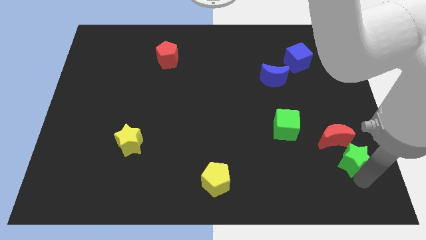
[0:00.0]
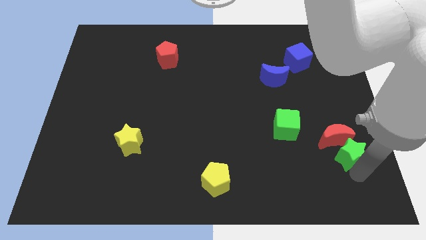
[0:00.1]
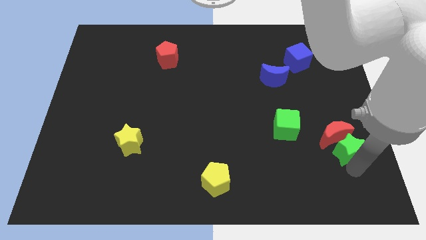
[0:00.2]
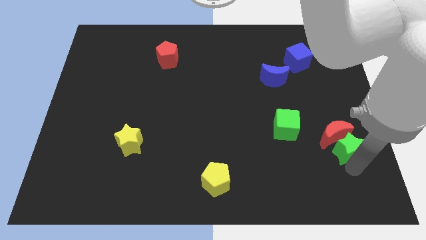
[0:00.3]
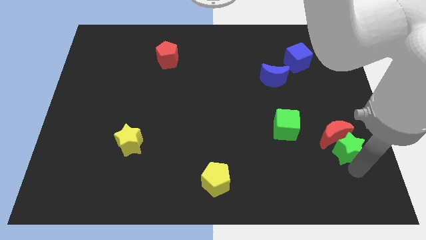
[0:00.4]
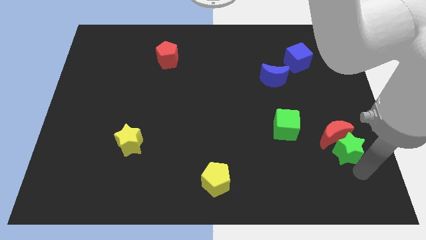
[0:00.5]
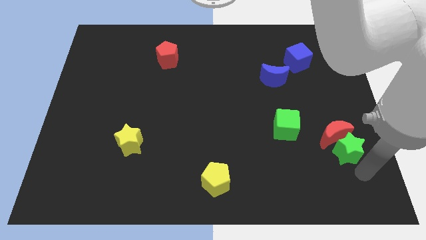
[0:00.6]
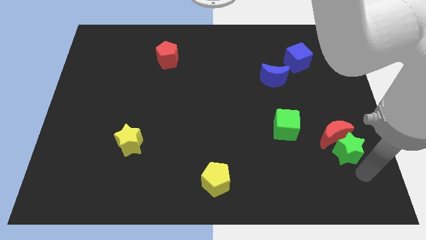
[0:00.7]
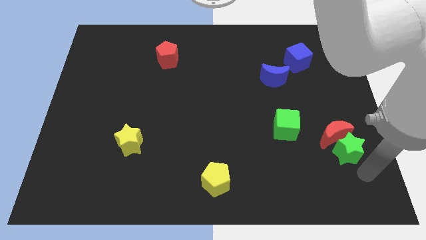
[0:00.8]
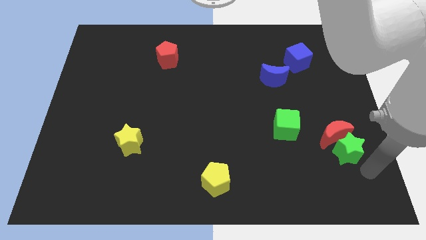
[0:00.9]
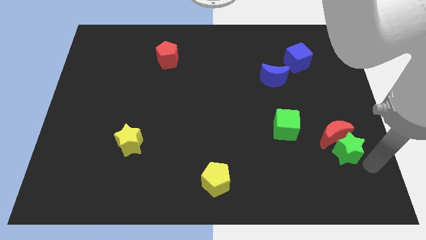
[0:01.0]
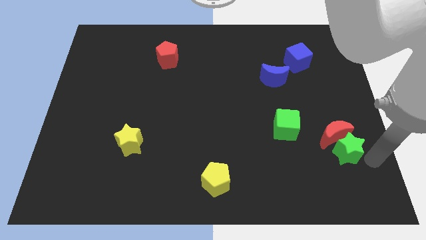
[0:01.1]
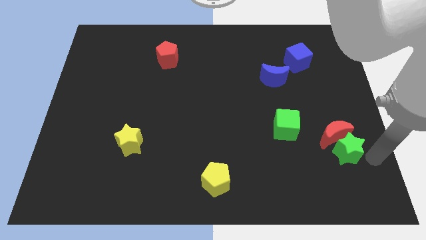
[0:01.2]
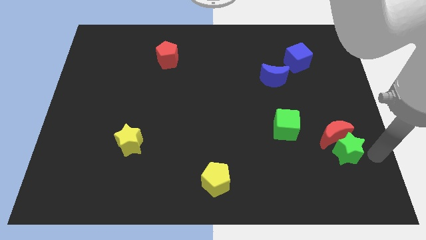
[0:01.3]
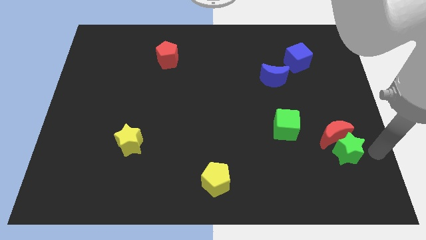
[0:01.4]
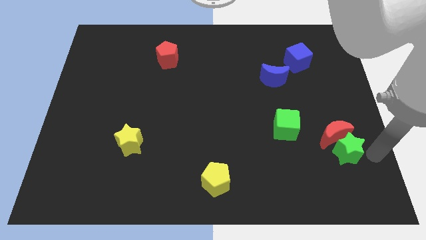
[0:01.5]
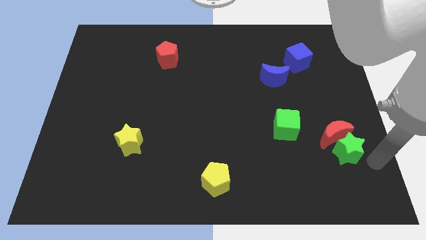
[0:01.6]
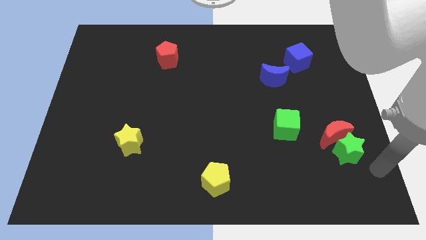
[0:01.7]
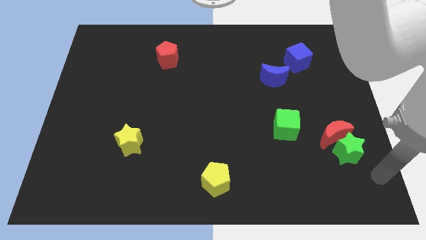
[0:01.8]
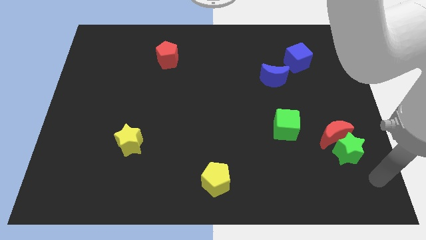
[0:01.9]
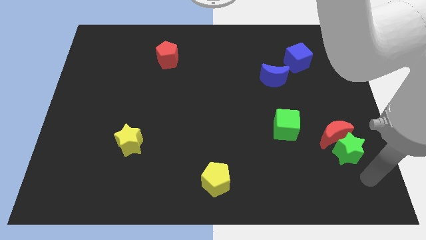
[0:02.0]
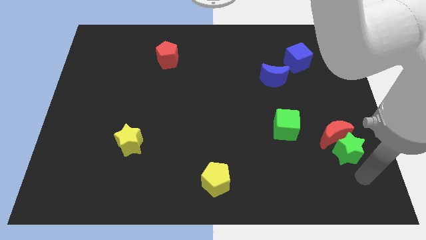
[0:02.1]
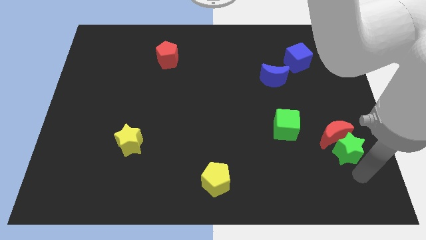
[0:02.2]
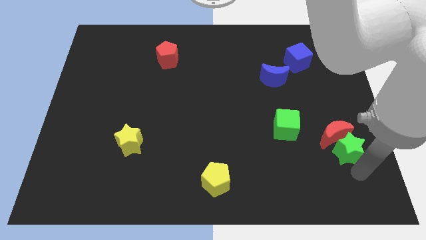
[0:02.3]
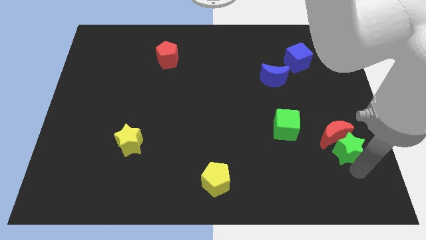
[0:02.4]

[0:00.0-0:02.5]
push the green star slightly upside to the red crescent

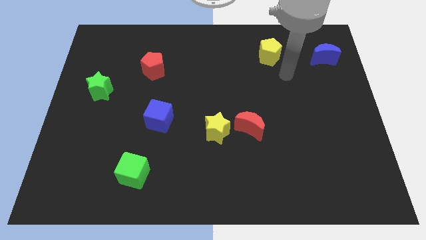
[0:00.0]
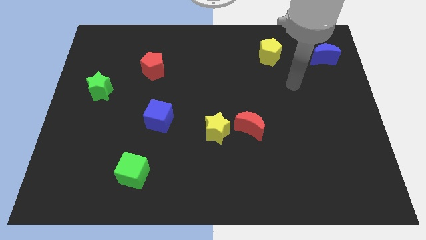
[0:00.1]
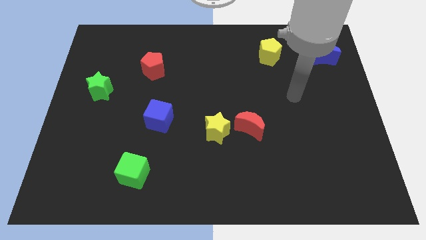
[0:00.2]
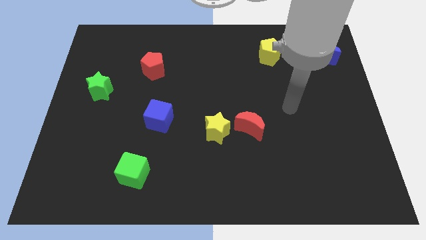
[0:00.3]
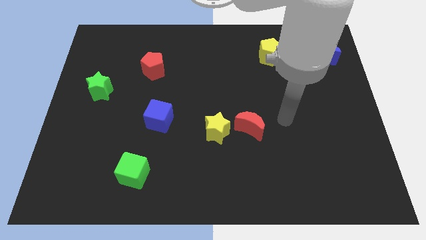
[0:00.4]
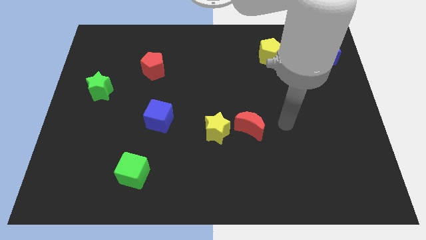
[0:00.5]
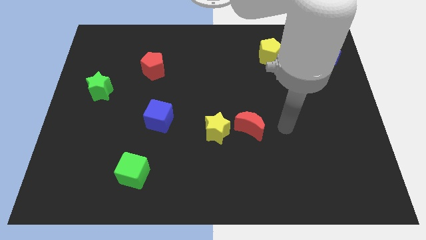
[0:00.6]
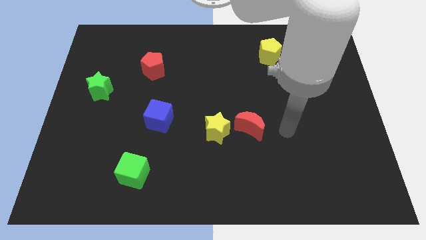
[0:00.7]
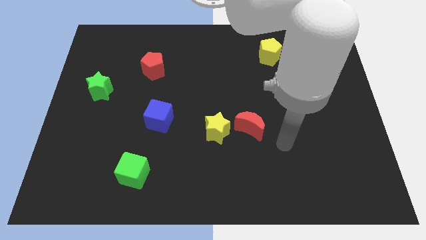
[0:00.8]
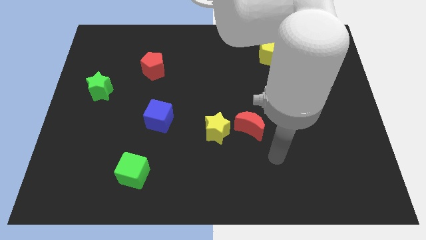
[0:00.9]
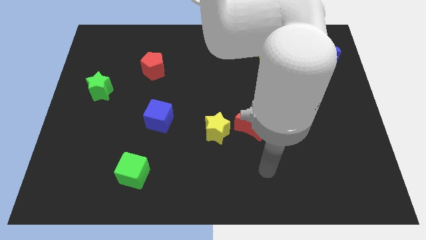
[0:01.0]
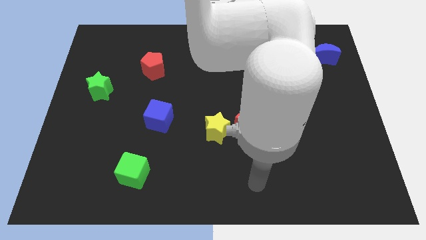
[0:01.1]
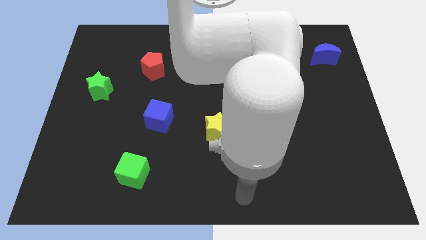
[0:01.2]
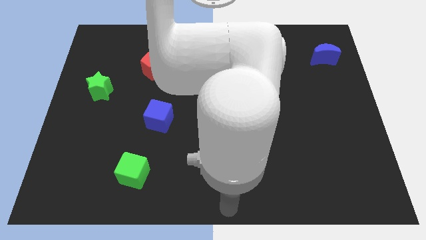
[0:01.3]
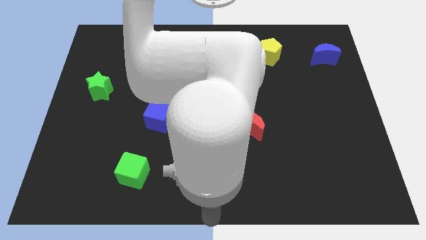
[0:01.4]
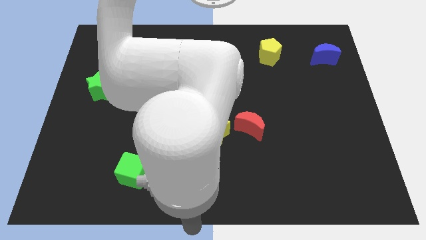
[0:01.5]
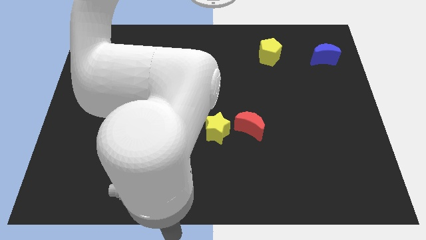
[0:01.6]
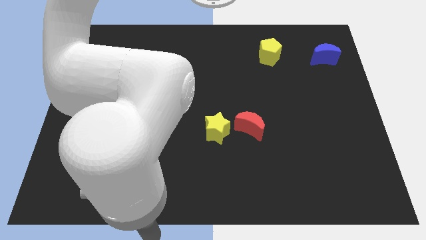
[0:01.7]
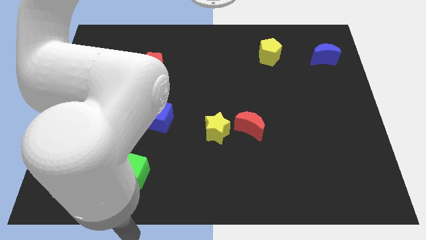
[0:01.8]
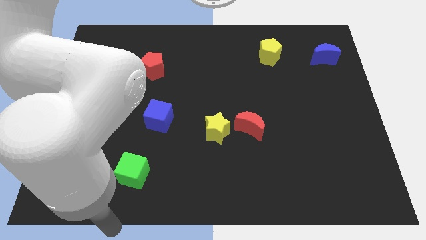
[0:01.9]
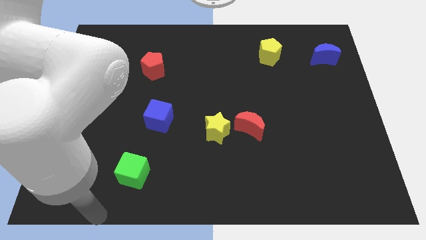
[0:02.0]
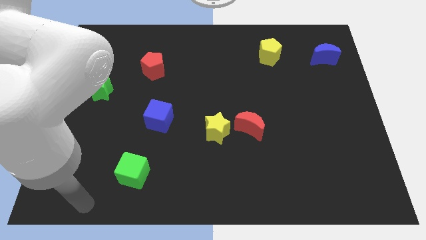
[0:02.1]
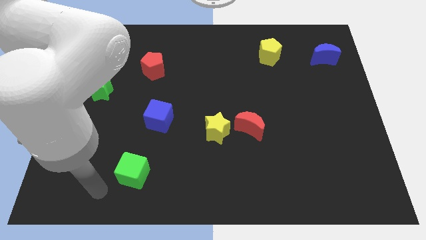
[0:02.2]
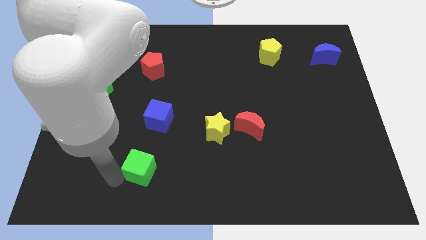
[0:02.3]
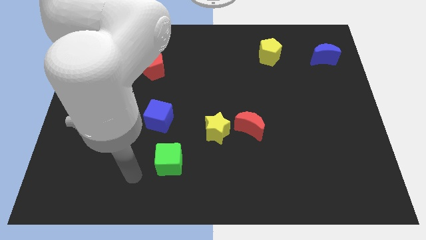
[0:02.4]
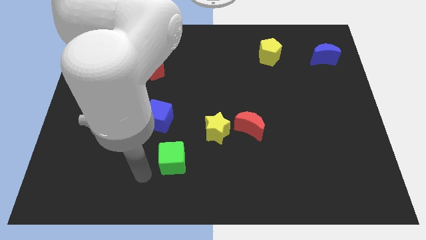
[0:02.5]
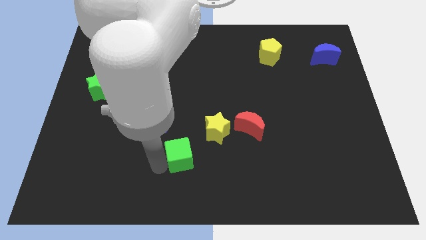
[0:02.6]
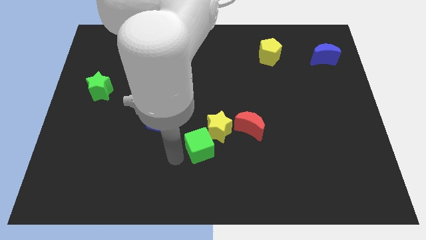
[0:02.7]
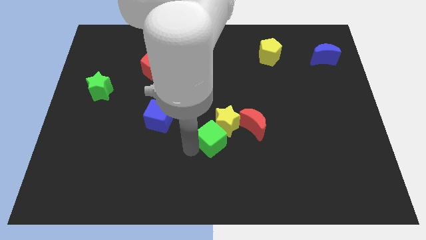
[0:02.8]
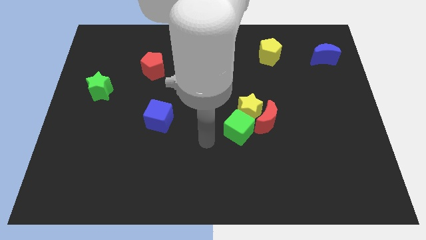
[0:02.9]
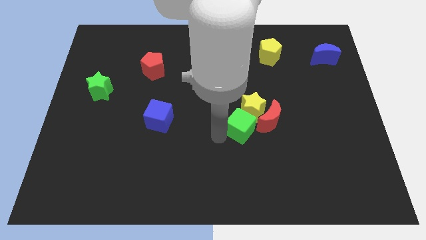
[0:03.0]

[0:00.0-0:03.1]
push the green cube into the yellow star

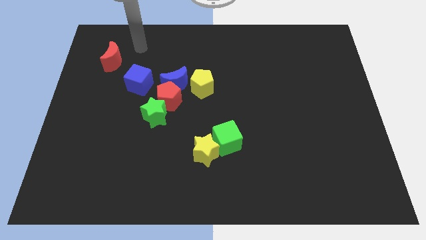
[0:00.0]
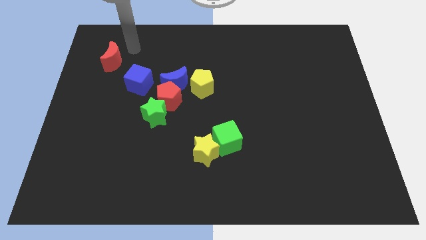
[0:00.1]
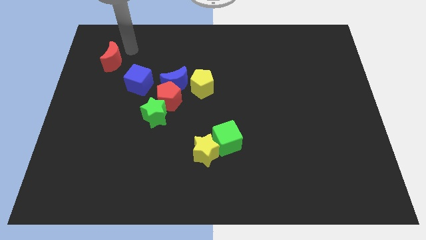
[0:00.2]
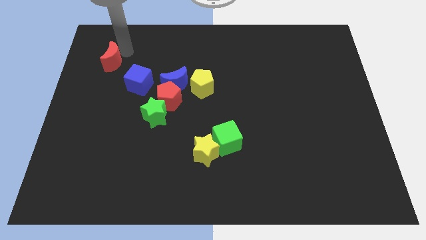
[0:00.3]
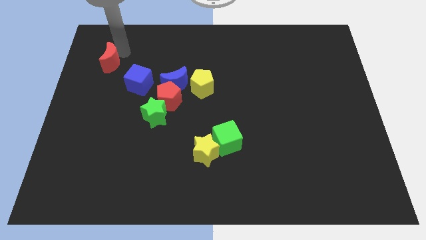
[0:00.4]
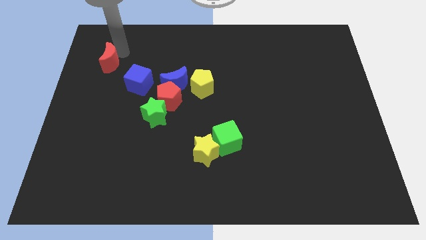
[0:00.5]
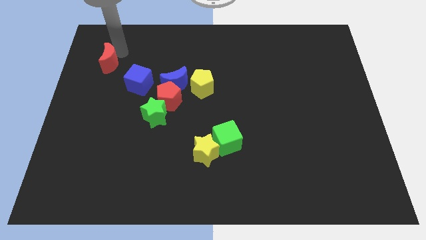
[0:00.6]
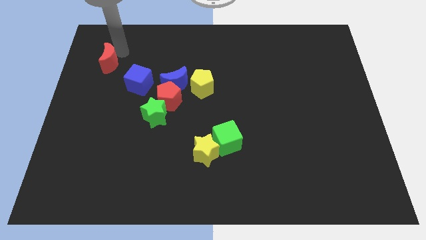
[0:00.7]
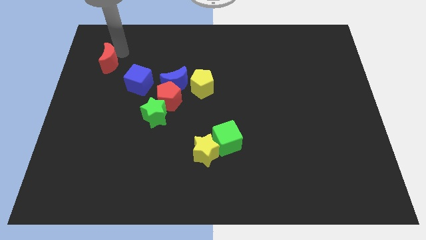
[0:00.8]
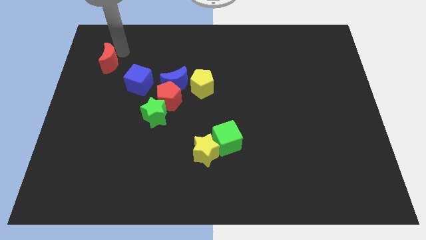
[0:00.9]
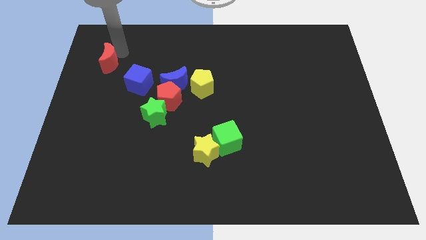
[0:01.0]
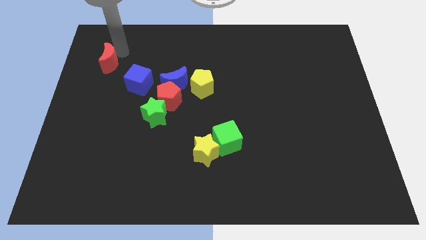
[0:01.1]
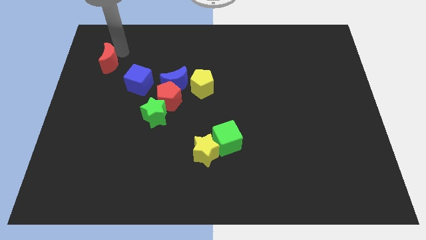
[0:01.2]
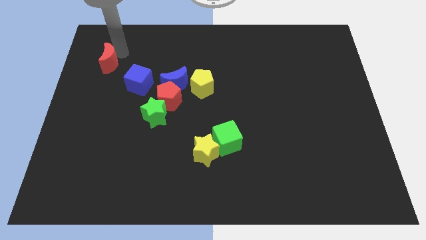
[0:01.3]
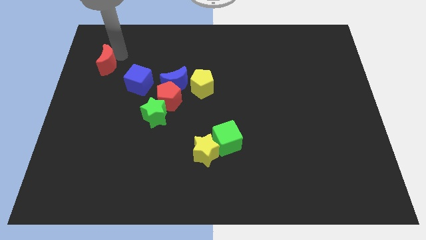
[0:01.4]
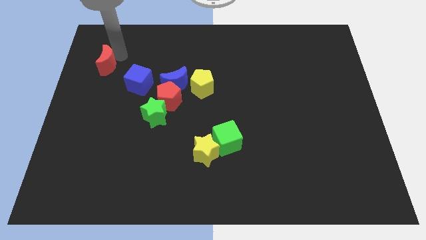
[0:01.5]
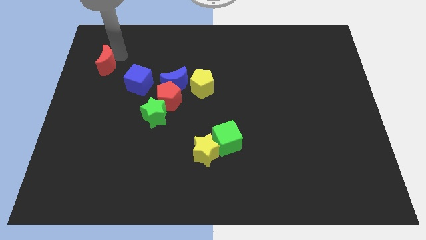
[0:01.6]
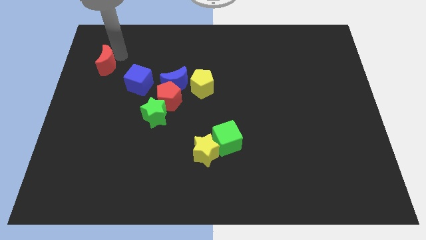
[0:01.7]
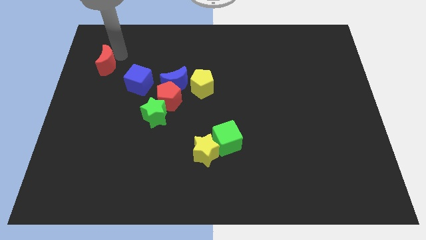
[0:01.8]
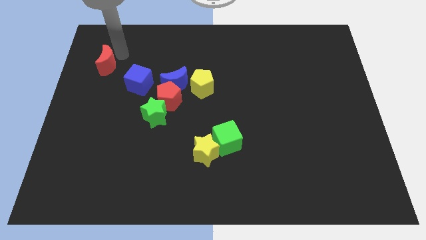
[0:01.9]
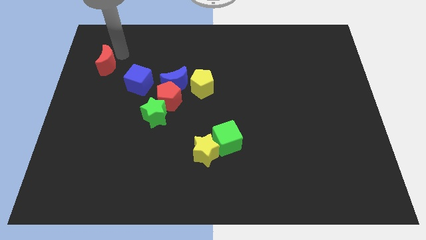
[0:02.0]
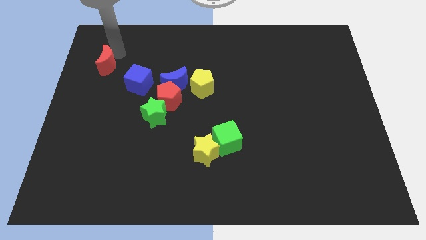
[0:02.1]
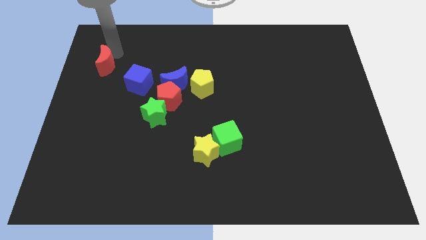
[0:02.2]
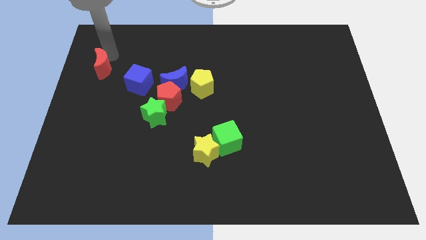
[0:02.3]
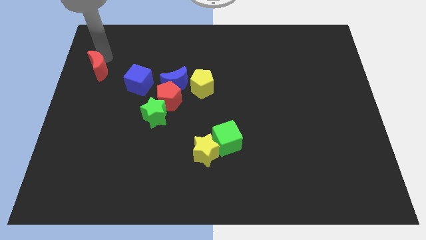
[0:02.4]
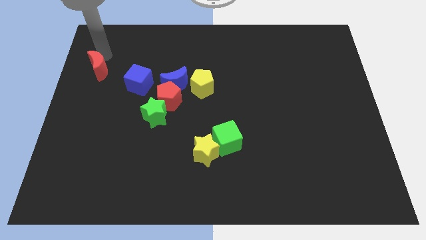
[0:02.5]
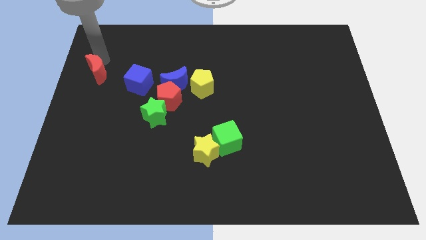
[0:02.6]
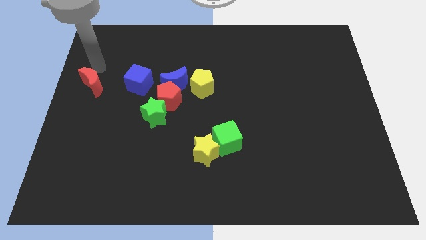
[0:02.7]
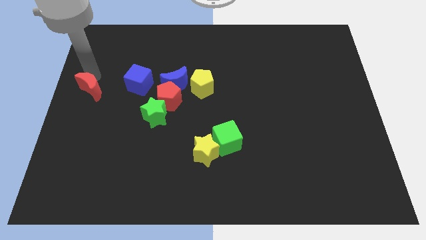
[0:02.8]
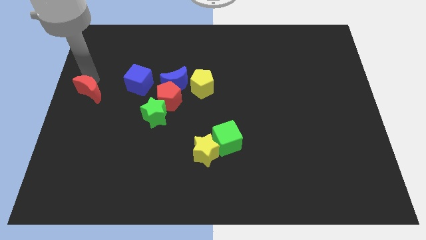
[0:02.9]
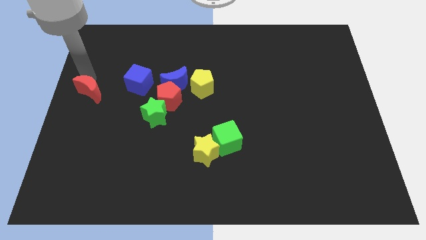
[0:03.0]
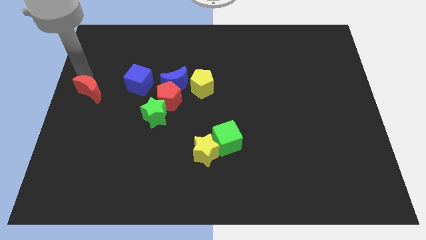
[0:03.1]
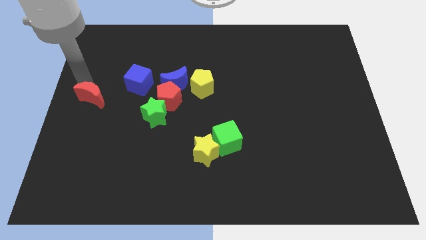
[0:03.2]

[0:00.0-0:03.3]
push the red moon slightly to bottom left of blue cube
